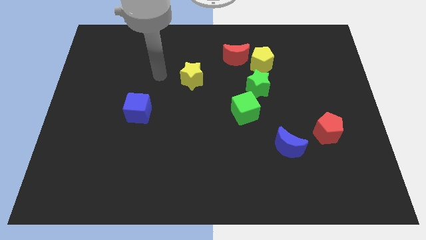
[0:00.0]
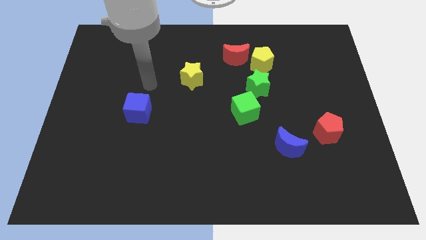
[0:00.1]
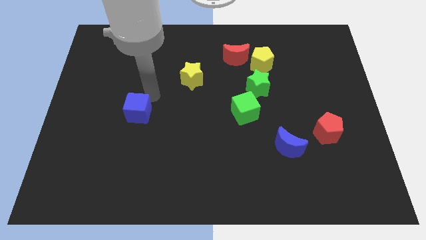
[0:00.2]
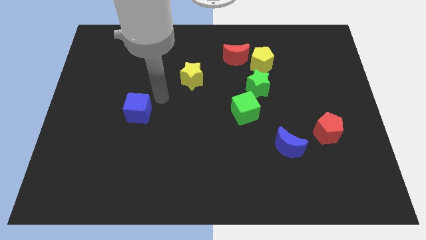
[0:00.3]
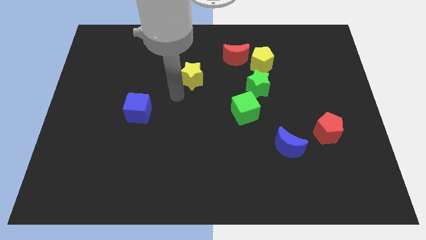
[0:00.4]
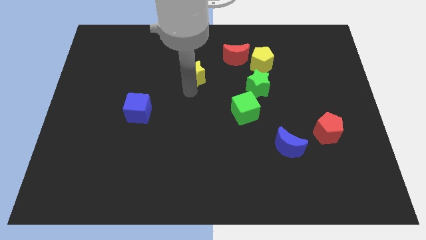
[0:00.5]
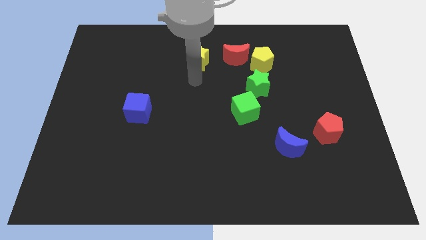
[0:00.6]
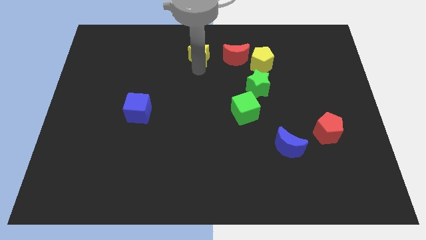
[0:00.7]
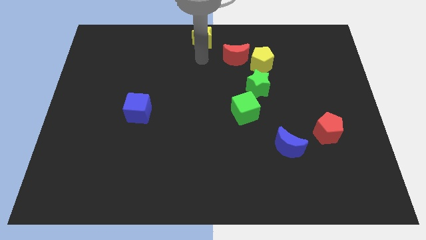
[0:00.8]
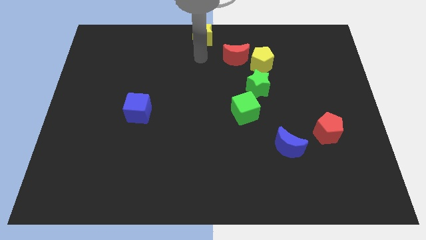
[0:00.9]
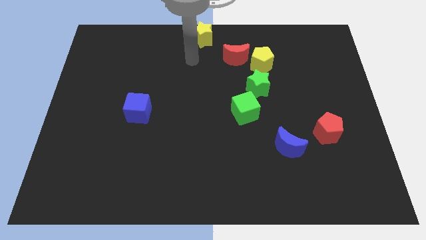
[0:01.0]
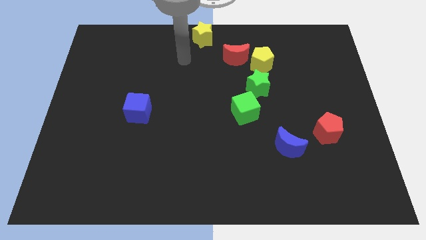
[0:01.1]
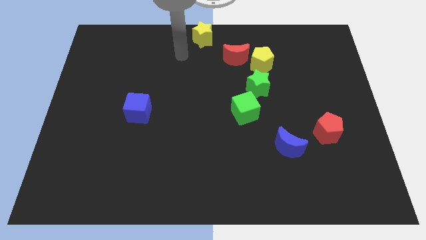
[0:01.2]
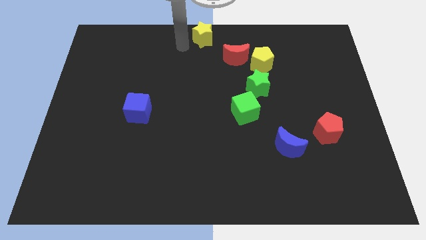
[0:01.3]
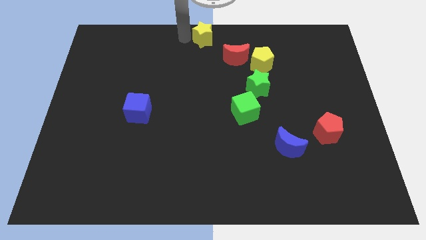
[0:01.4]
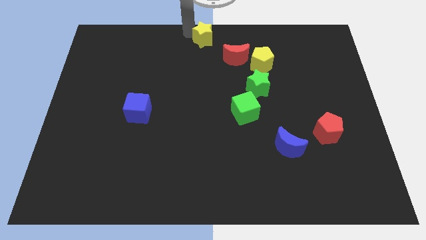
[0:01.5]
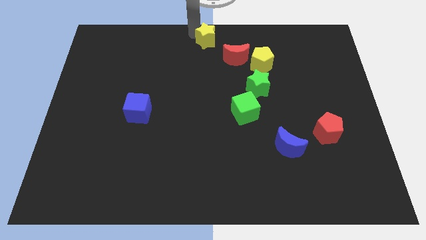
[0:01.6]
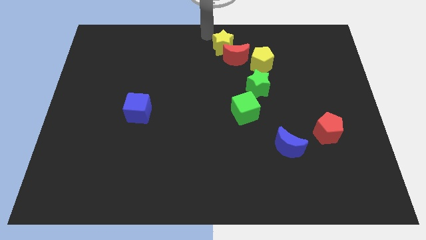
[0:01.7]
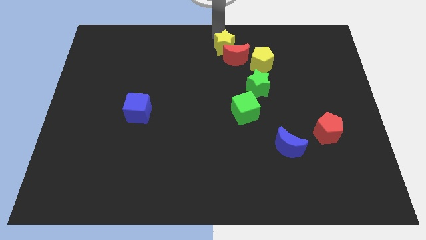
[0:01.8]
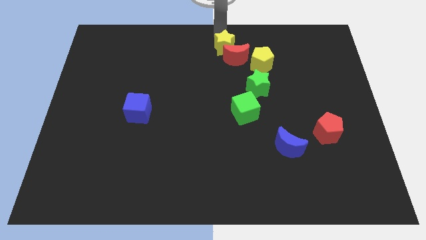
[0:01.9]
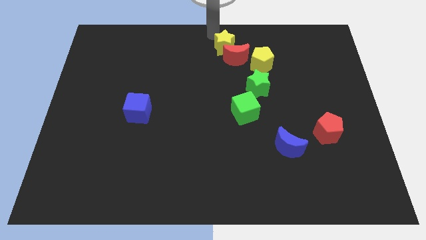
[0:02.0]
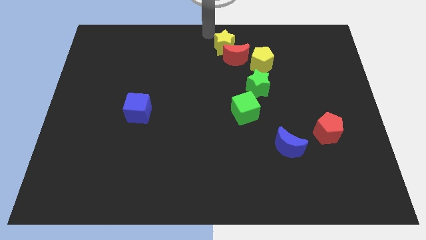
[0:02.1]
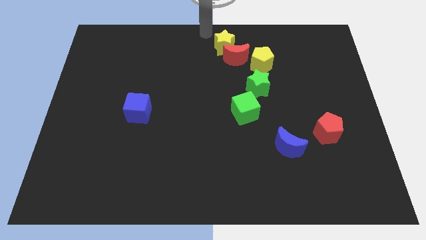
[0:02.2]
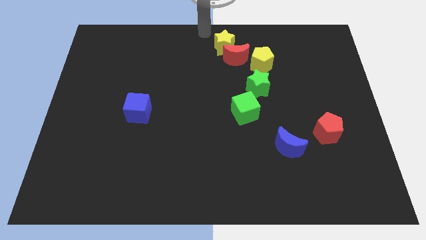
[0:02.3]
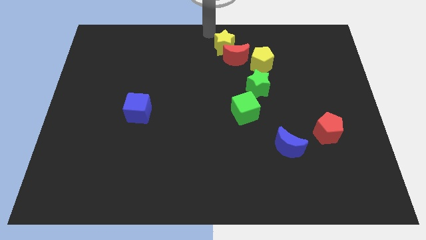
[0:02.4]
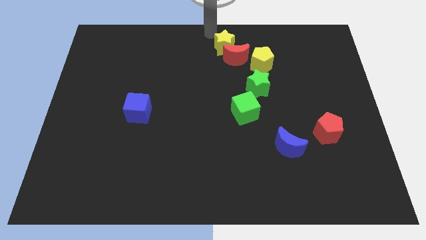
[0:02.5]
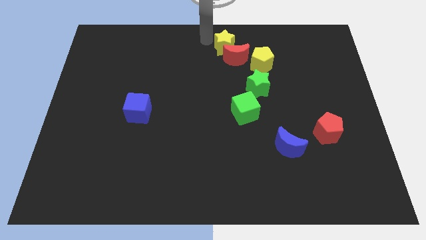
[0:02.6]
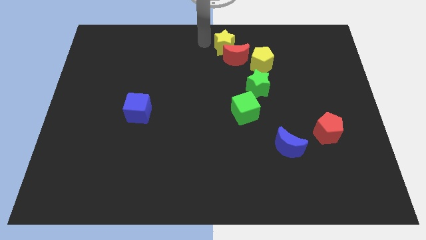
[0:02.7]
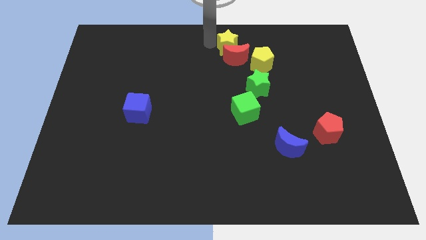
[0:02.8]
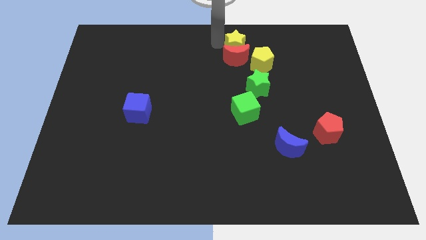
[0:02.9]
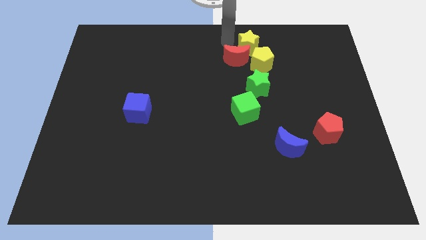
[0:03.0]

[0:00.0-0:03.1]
push the yellow star into red crescent

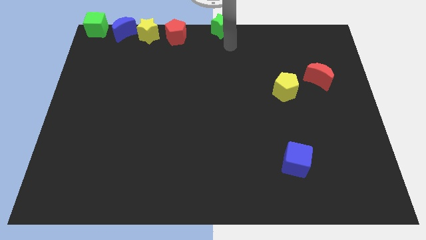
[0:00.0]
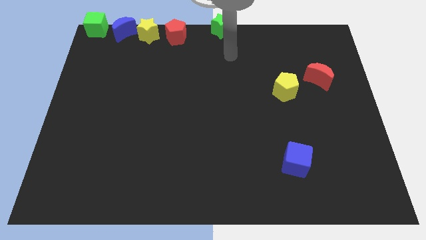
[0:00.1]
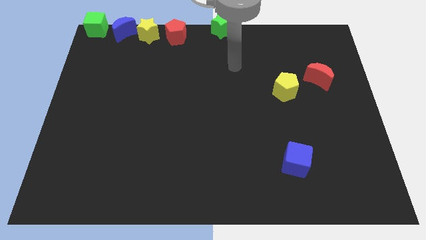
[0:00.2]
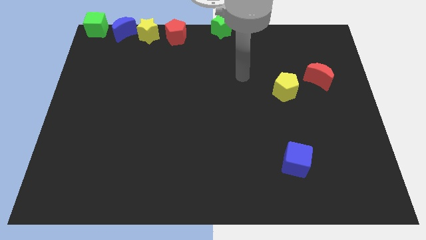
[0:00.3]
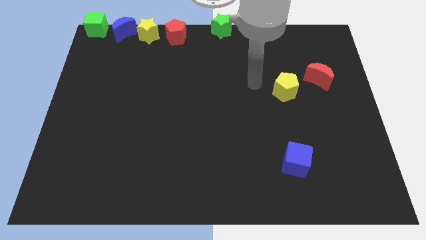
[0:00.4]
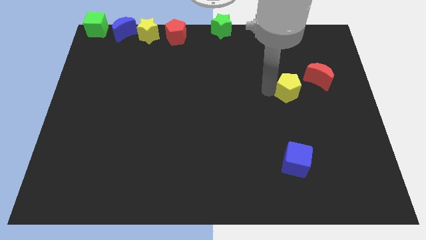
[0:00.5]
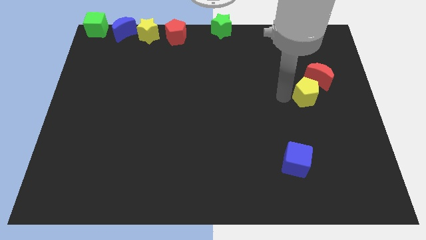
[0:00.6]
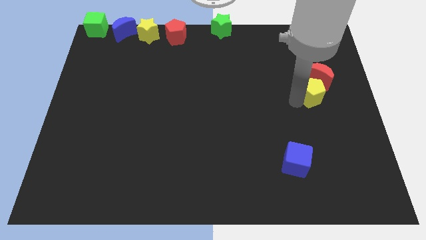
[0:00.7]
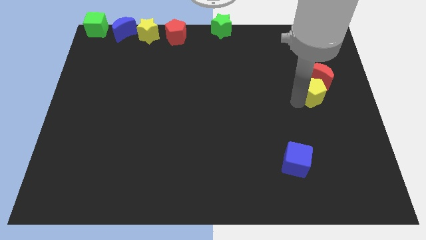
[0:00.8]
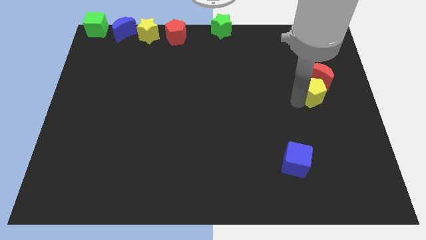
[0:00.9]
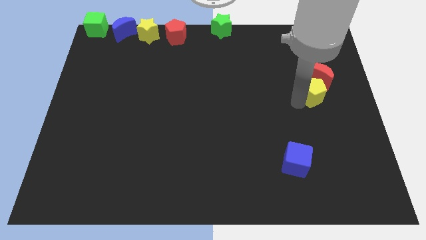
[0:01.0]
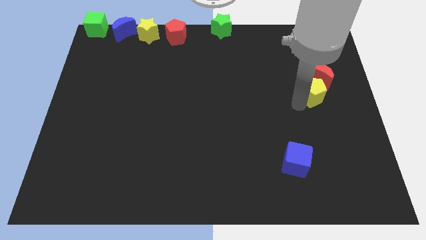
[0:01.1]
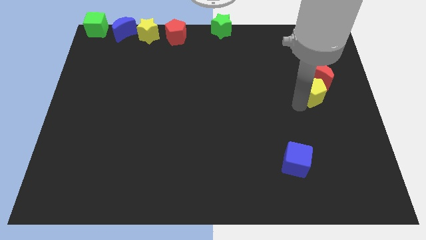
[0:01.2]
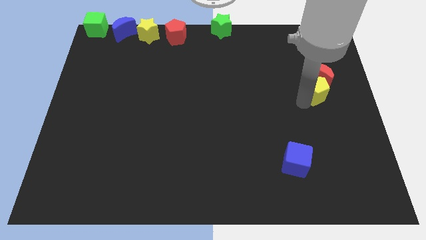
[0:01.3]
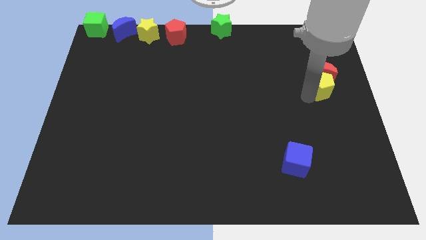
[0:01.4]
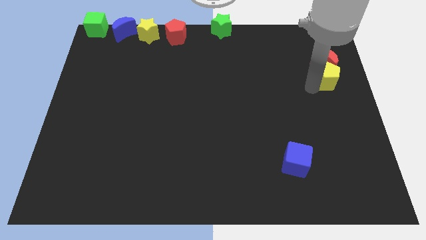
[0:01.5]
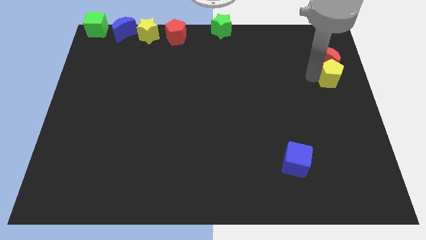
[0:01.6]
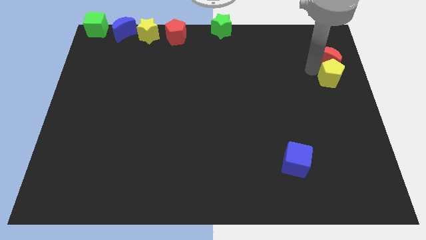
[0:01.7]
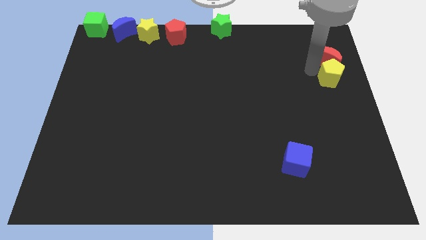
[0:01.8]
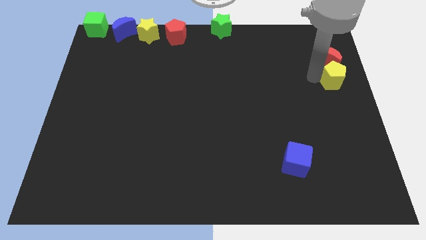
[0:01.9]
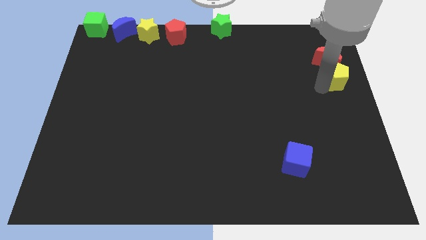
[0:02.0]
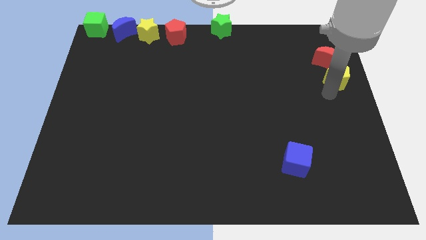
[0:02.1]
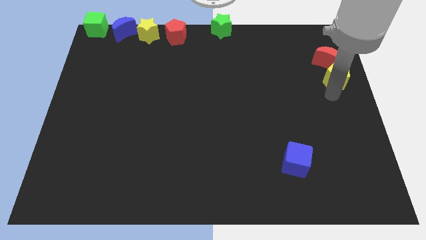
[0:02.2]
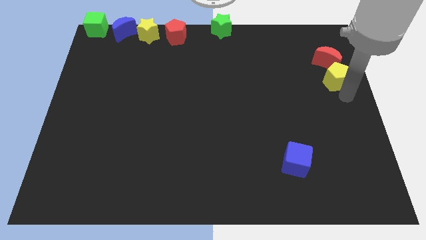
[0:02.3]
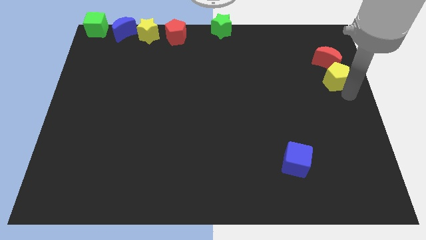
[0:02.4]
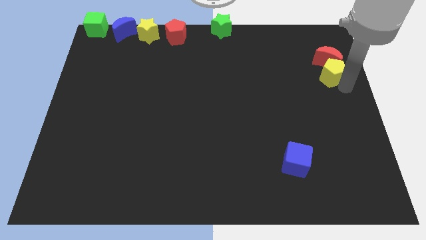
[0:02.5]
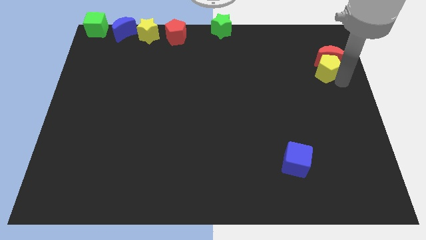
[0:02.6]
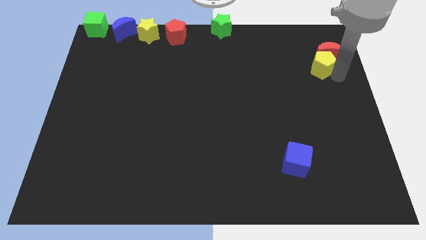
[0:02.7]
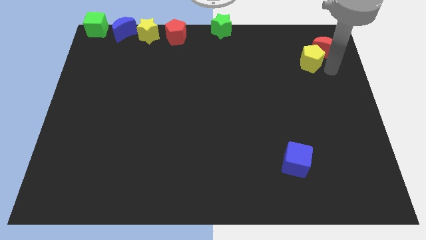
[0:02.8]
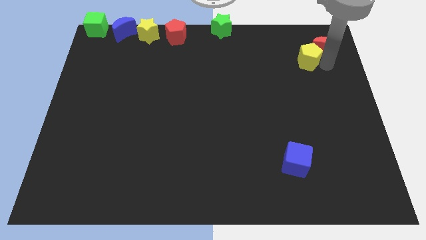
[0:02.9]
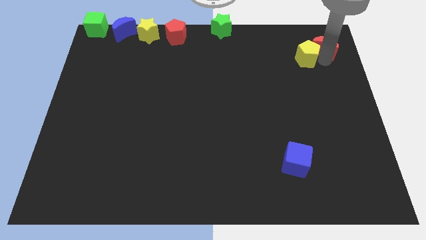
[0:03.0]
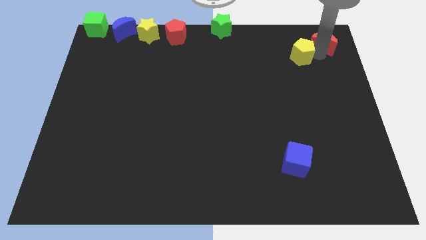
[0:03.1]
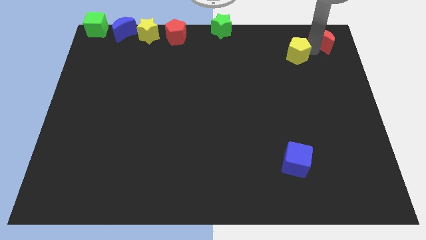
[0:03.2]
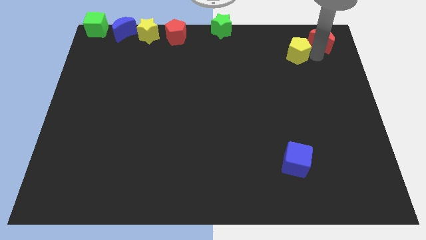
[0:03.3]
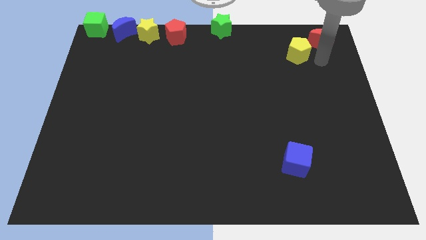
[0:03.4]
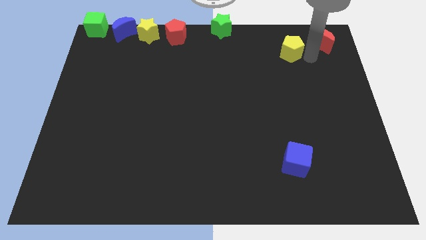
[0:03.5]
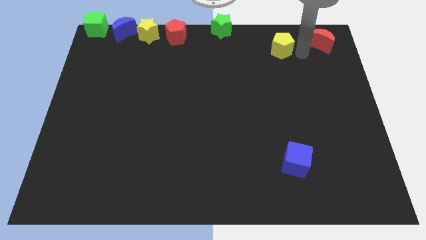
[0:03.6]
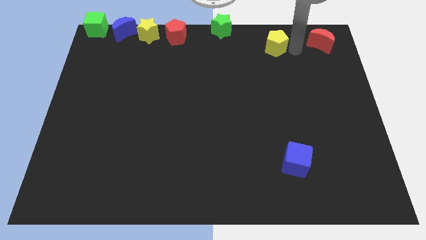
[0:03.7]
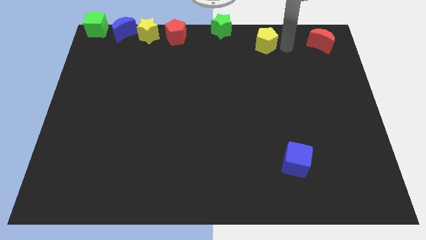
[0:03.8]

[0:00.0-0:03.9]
separate the yellow pentagon from the red crescent

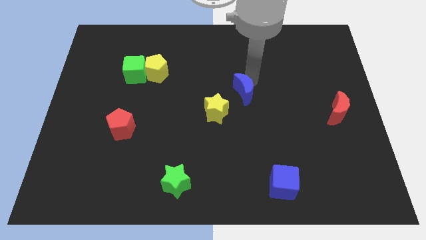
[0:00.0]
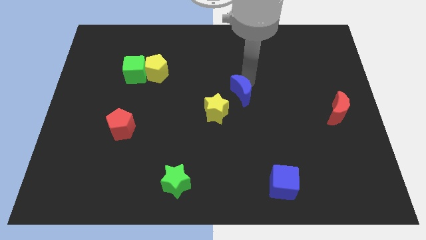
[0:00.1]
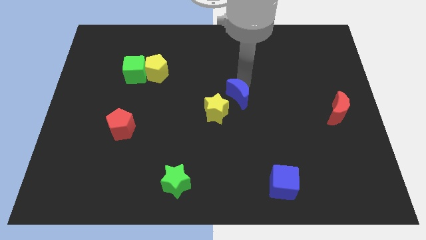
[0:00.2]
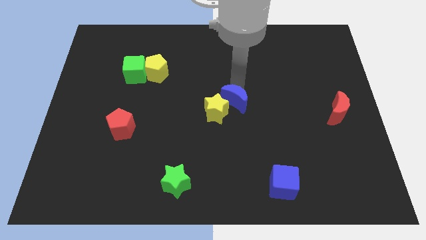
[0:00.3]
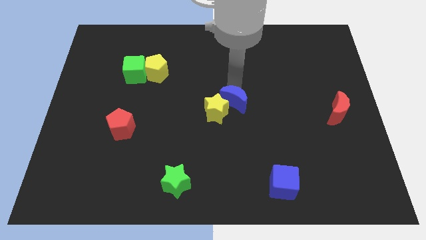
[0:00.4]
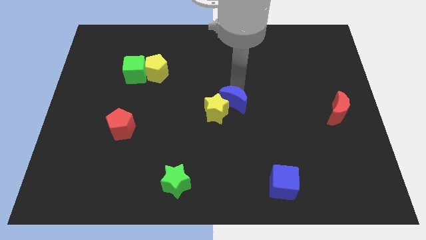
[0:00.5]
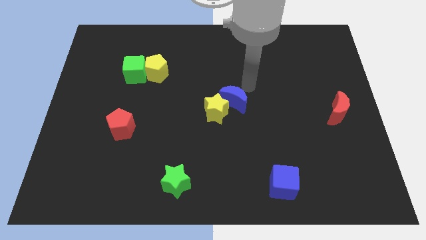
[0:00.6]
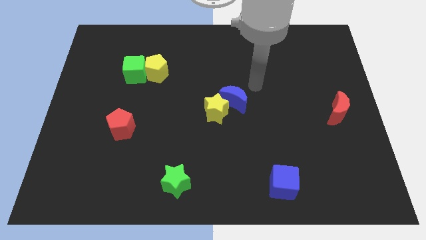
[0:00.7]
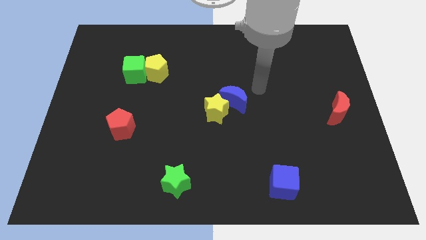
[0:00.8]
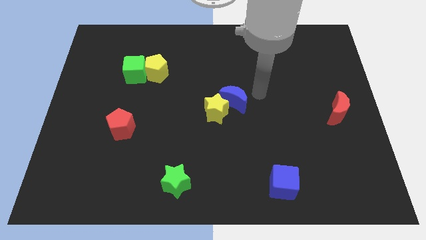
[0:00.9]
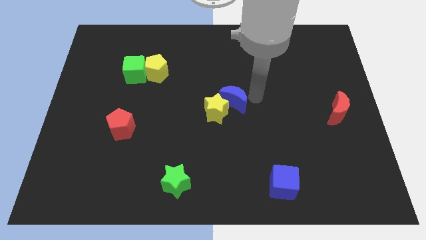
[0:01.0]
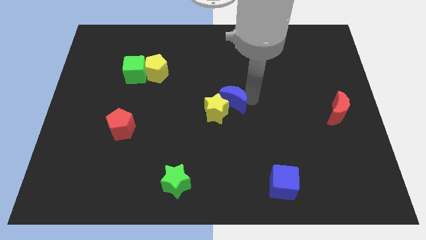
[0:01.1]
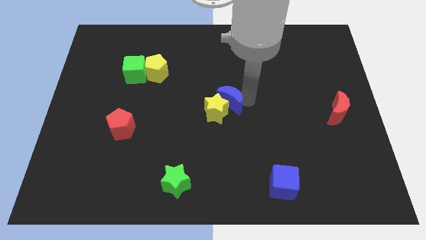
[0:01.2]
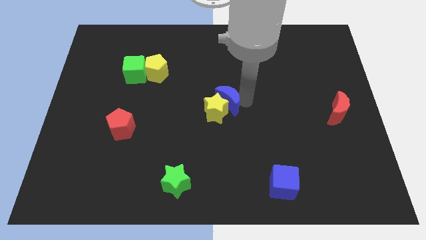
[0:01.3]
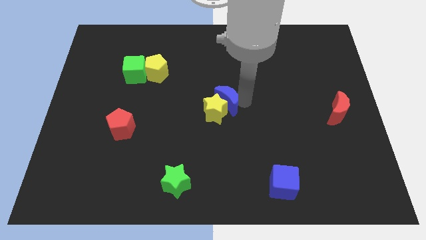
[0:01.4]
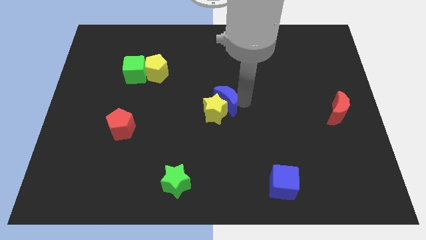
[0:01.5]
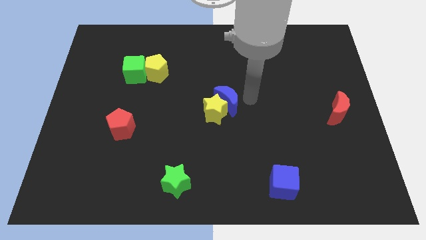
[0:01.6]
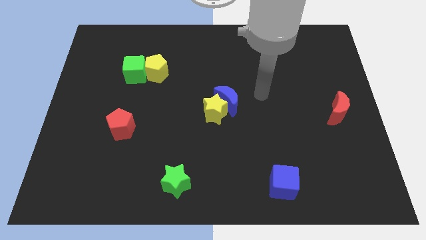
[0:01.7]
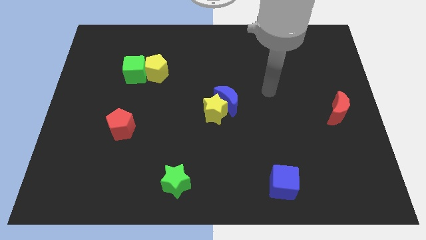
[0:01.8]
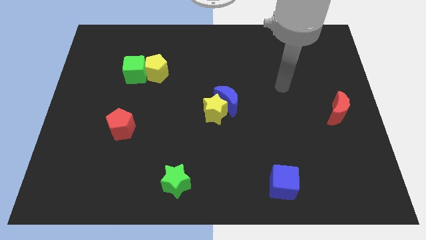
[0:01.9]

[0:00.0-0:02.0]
move the blue moon into the yellow star
